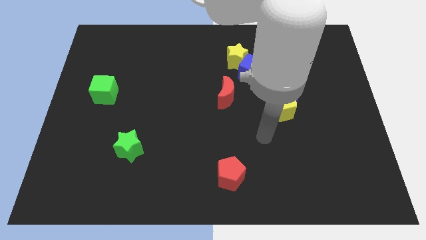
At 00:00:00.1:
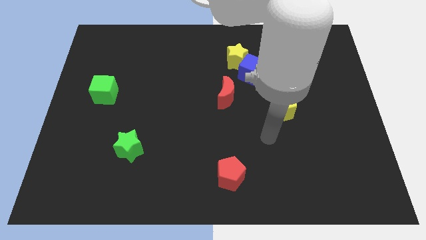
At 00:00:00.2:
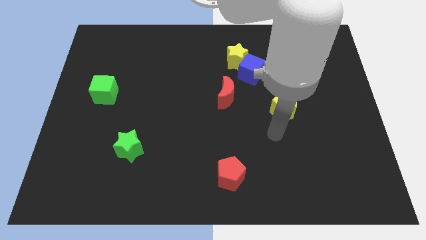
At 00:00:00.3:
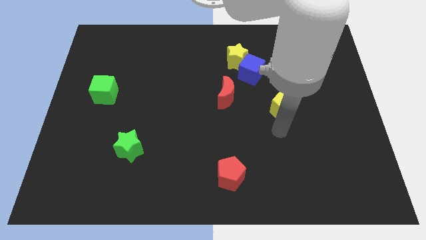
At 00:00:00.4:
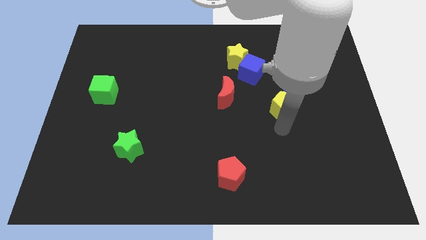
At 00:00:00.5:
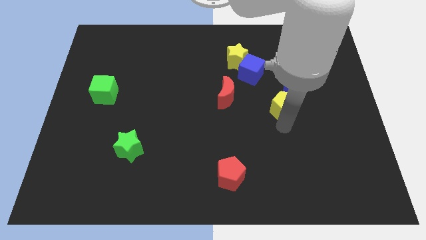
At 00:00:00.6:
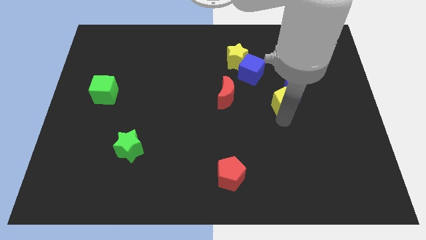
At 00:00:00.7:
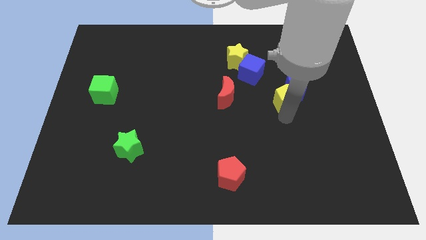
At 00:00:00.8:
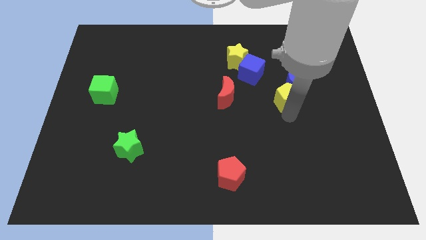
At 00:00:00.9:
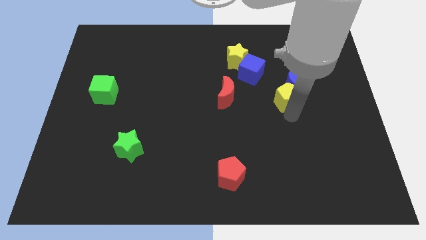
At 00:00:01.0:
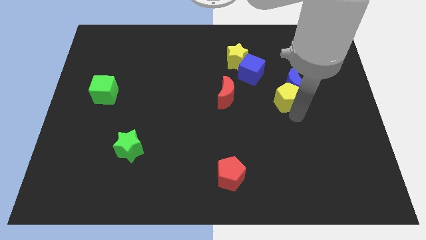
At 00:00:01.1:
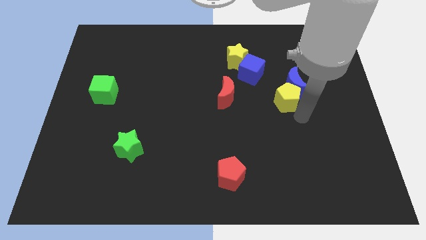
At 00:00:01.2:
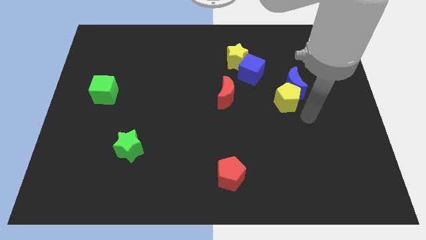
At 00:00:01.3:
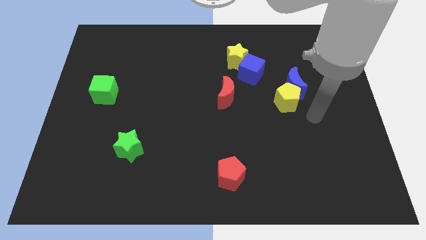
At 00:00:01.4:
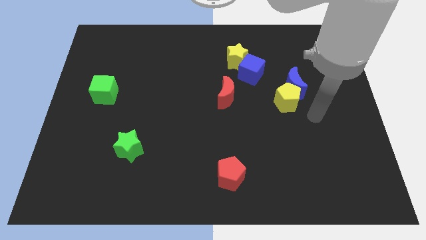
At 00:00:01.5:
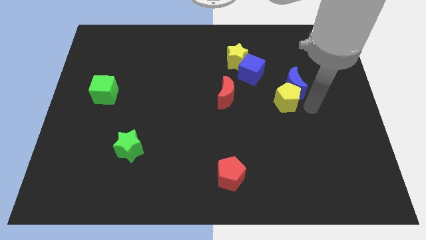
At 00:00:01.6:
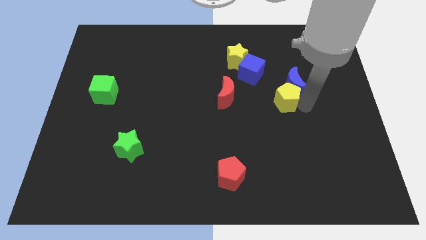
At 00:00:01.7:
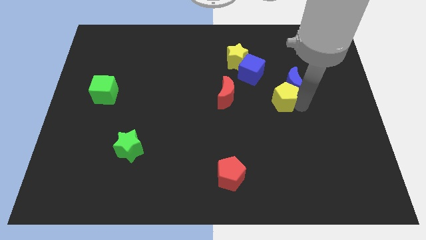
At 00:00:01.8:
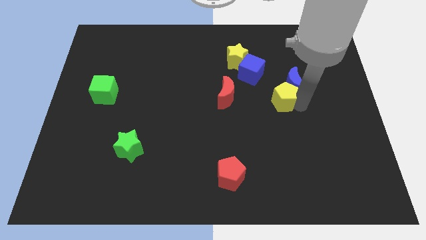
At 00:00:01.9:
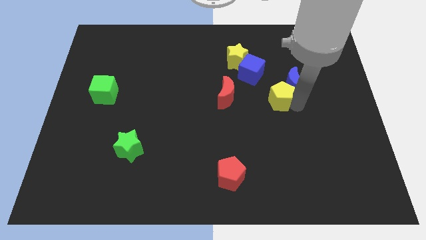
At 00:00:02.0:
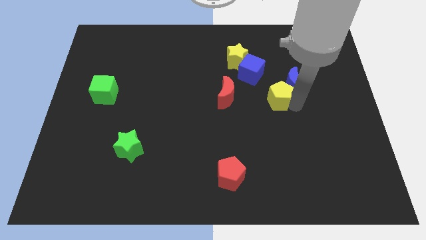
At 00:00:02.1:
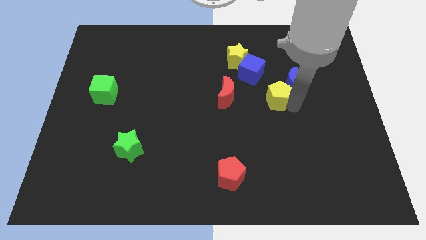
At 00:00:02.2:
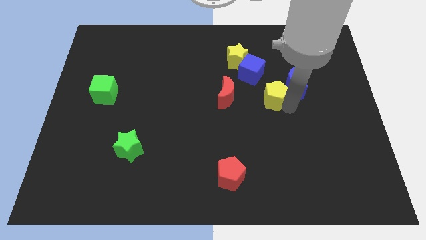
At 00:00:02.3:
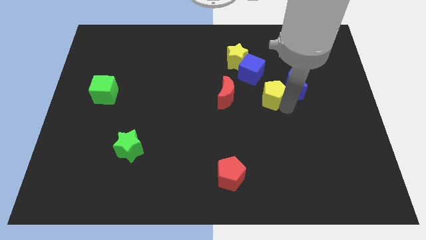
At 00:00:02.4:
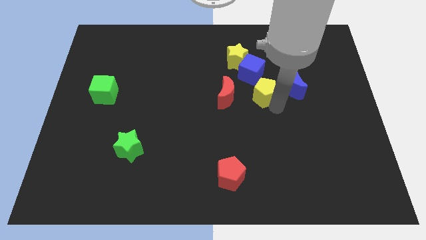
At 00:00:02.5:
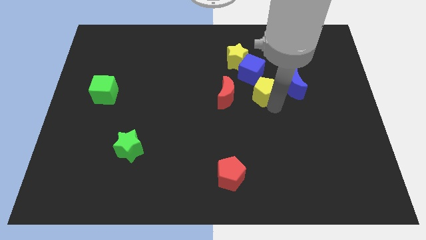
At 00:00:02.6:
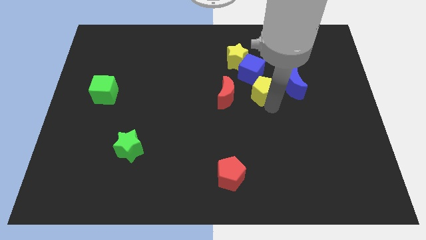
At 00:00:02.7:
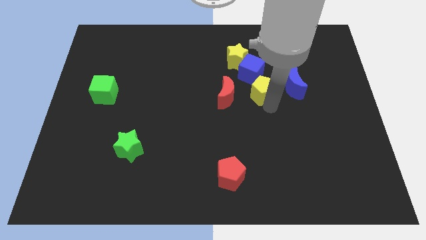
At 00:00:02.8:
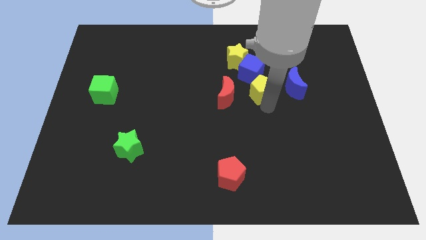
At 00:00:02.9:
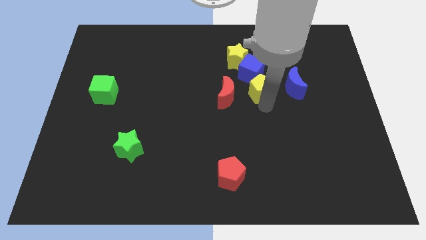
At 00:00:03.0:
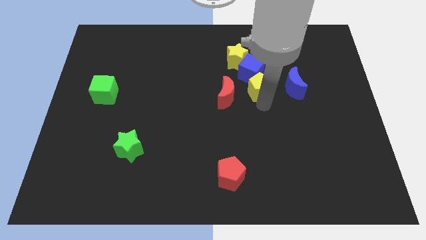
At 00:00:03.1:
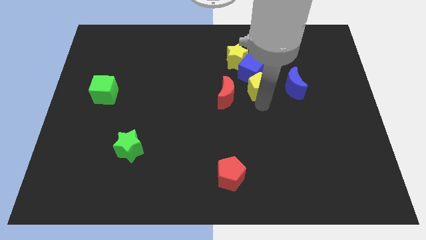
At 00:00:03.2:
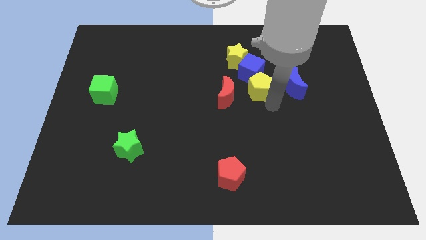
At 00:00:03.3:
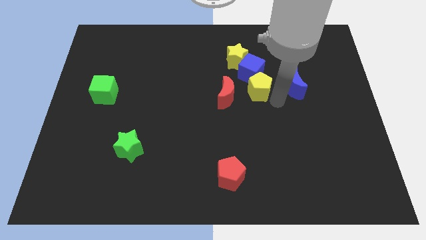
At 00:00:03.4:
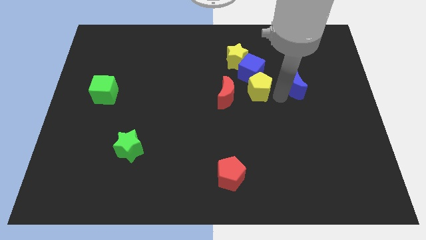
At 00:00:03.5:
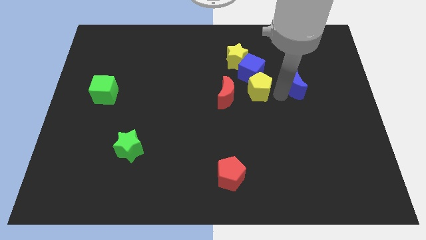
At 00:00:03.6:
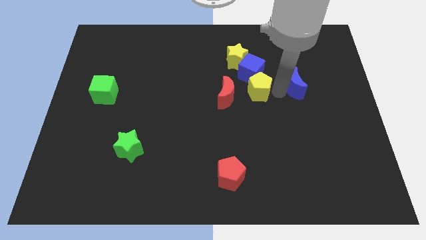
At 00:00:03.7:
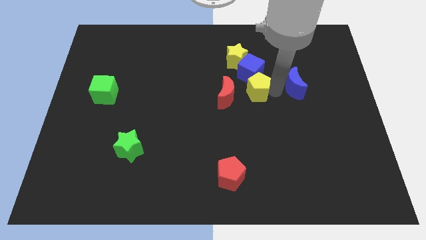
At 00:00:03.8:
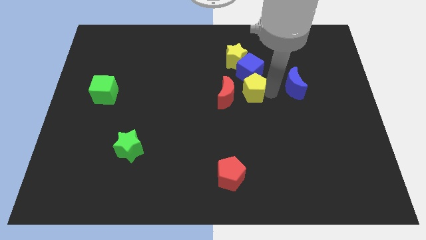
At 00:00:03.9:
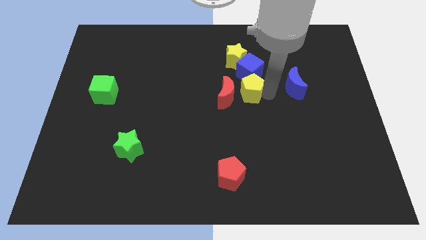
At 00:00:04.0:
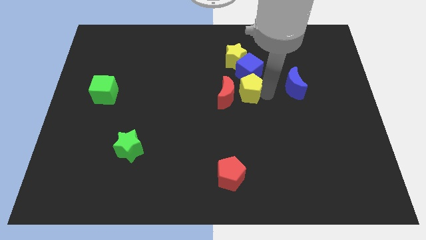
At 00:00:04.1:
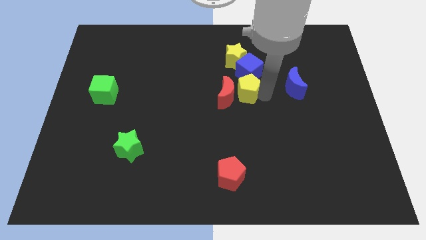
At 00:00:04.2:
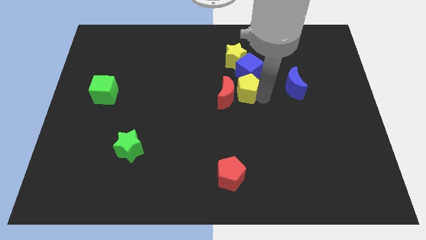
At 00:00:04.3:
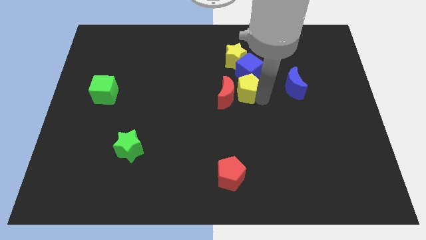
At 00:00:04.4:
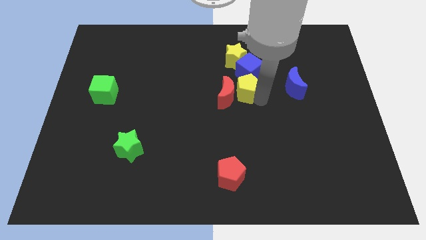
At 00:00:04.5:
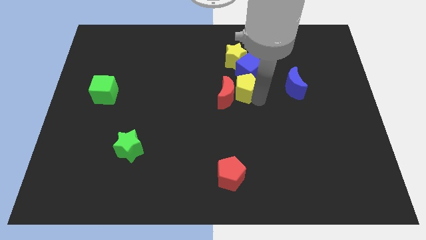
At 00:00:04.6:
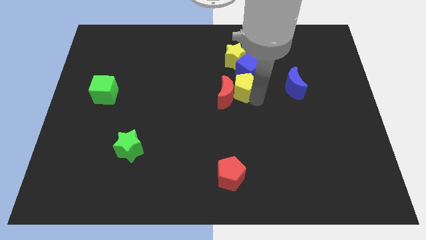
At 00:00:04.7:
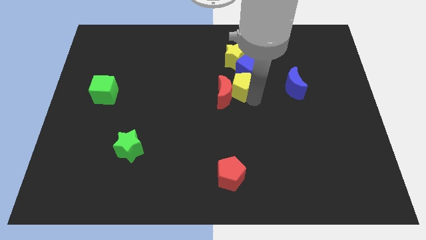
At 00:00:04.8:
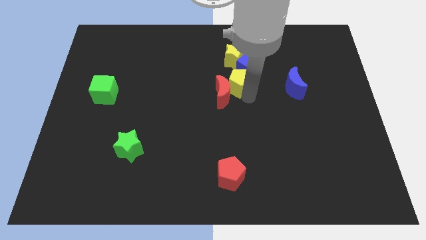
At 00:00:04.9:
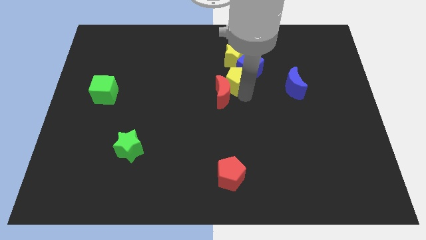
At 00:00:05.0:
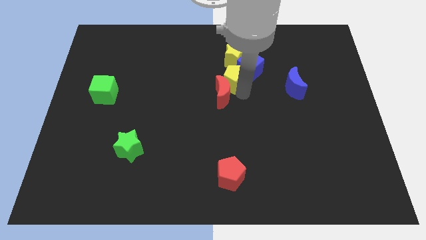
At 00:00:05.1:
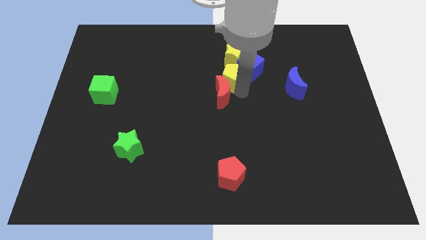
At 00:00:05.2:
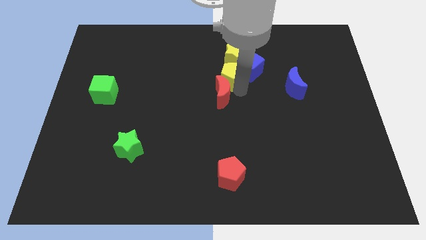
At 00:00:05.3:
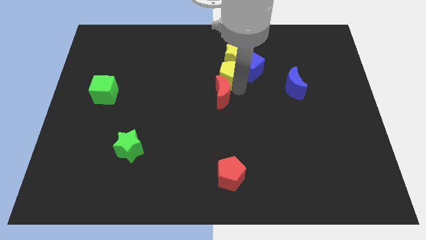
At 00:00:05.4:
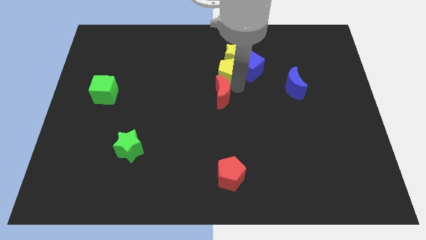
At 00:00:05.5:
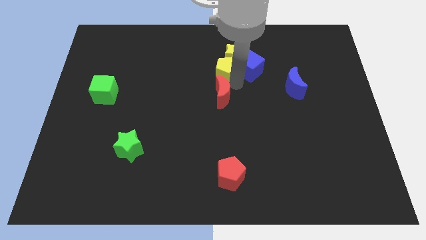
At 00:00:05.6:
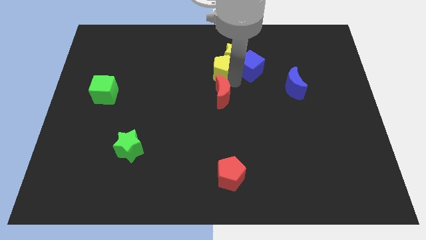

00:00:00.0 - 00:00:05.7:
put the yellow pentagon to the yellow star

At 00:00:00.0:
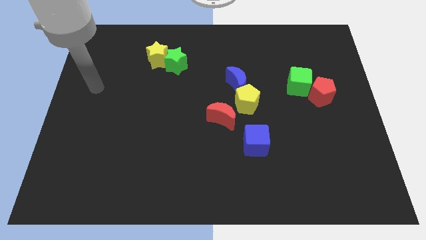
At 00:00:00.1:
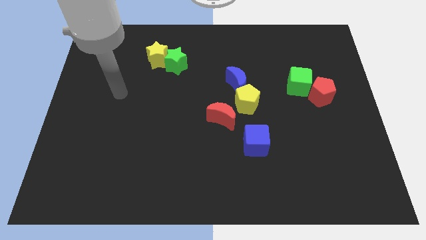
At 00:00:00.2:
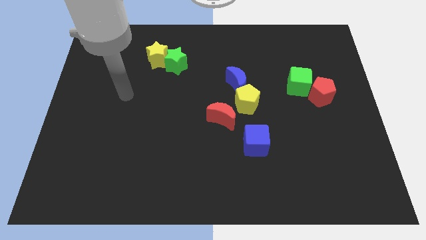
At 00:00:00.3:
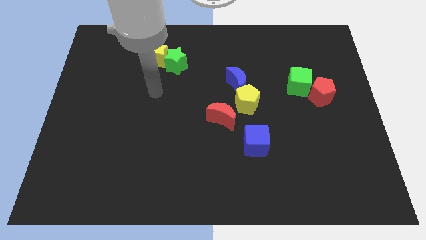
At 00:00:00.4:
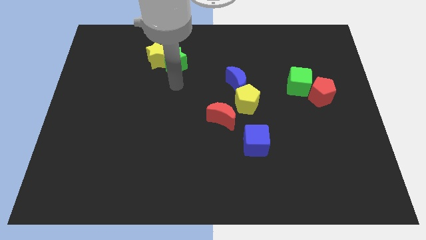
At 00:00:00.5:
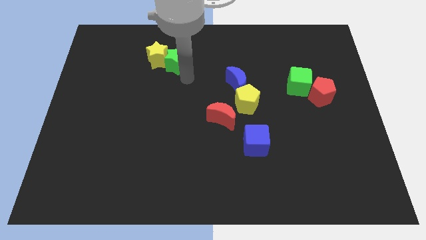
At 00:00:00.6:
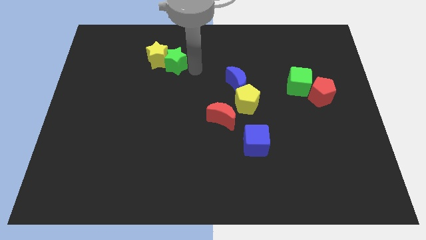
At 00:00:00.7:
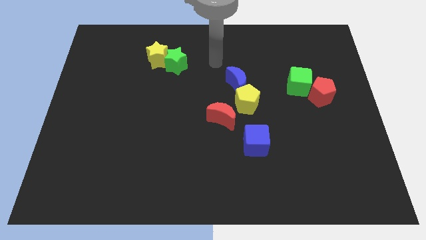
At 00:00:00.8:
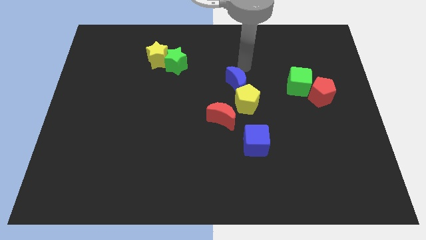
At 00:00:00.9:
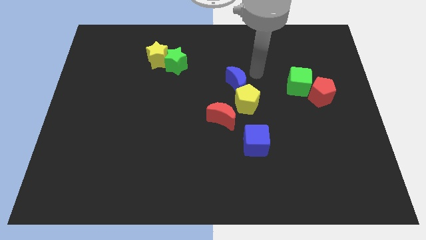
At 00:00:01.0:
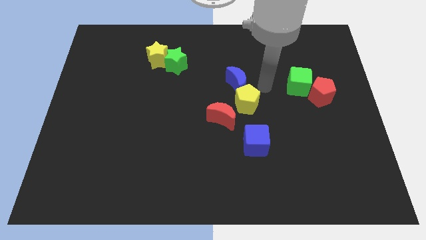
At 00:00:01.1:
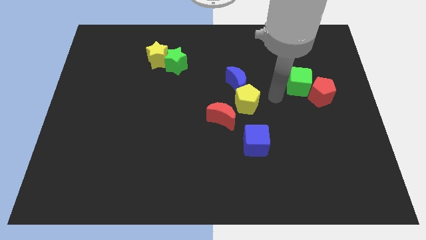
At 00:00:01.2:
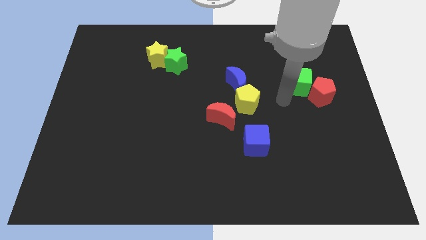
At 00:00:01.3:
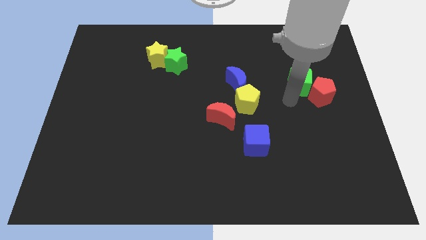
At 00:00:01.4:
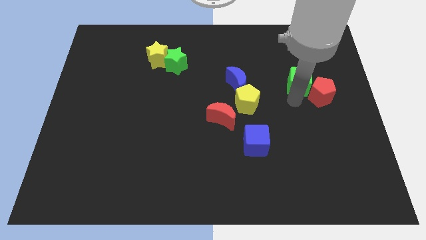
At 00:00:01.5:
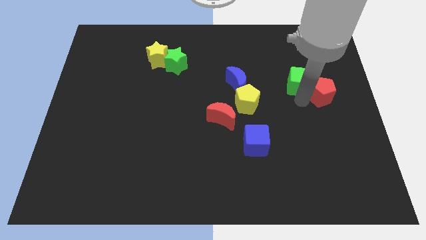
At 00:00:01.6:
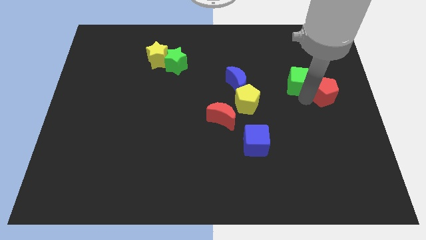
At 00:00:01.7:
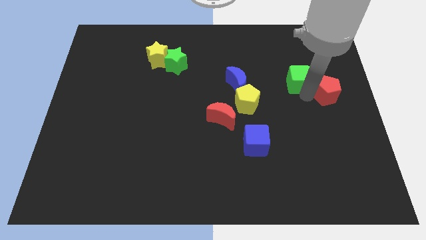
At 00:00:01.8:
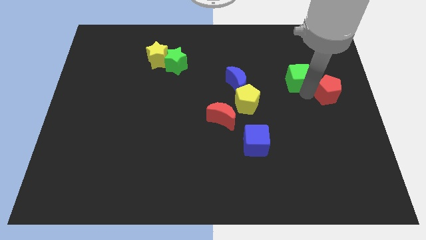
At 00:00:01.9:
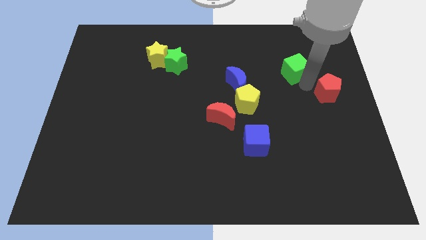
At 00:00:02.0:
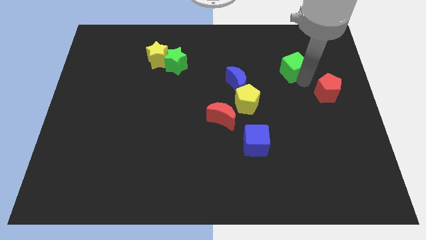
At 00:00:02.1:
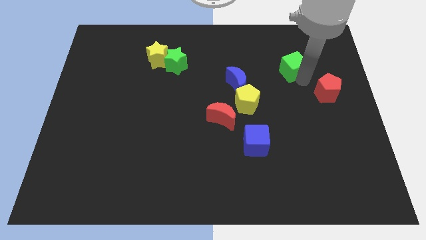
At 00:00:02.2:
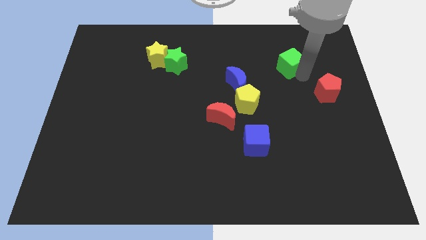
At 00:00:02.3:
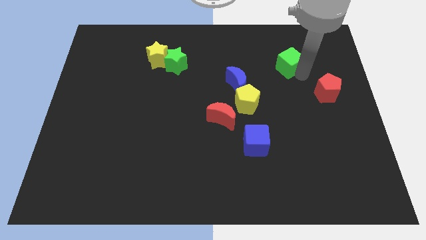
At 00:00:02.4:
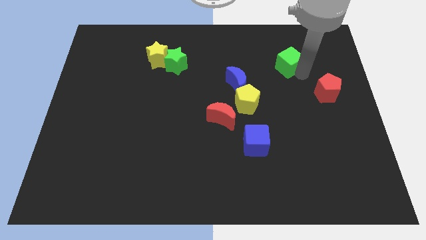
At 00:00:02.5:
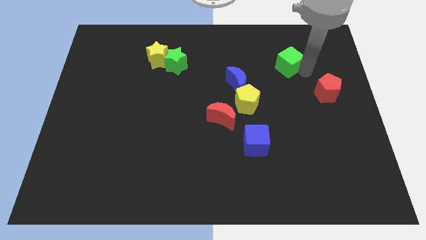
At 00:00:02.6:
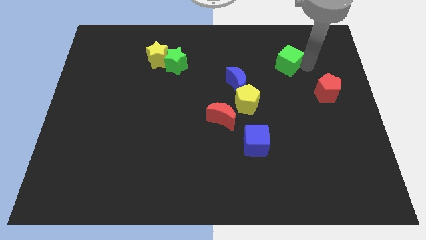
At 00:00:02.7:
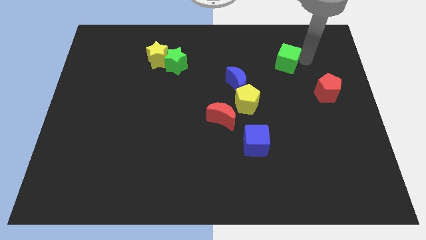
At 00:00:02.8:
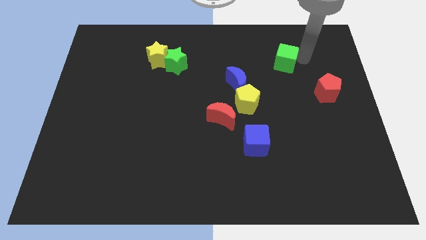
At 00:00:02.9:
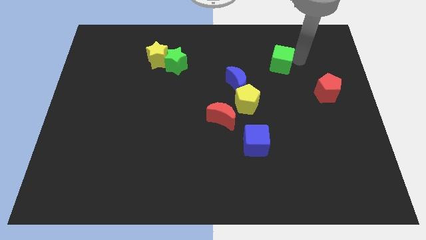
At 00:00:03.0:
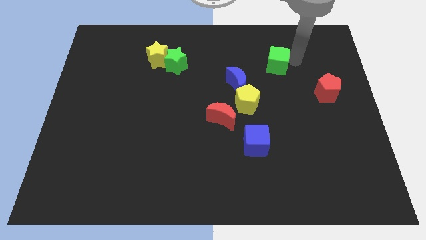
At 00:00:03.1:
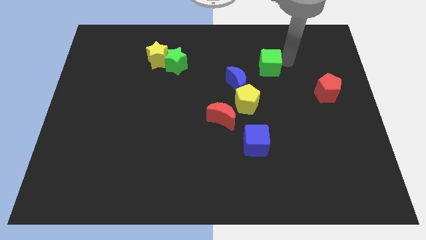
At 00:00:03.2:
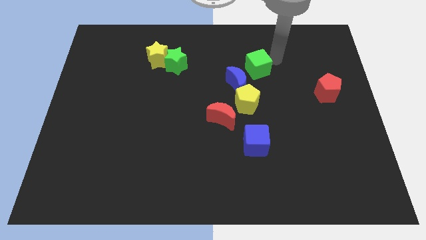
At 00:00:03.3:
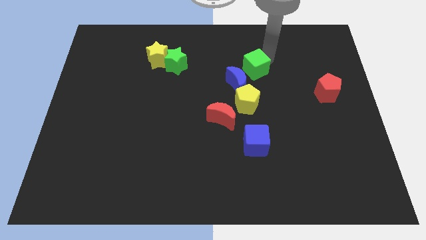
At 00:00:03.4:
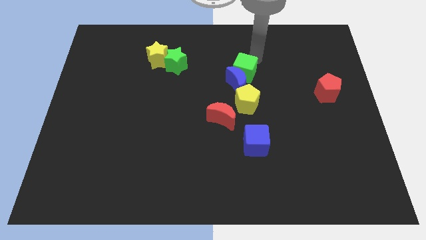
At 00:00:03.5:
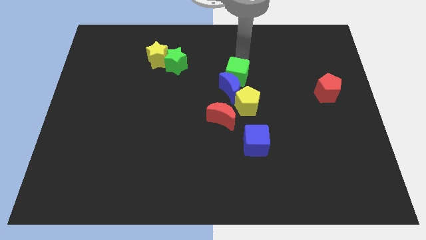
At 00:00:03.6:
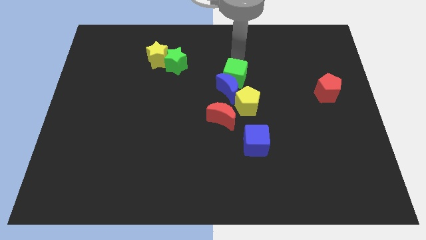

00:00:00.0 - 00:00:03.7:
move the green cube to the blue moon
